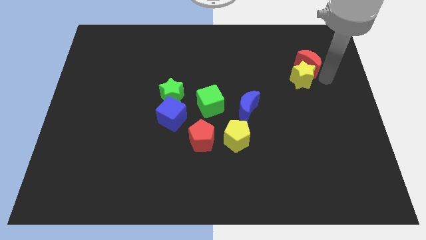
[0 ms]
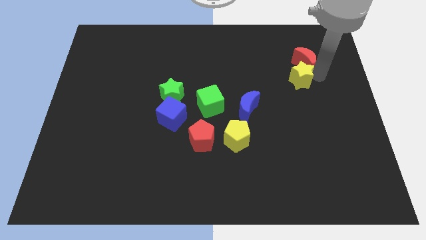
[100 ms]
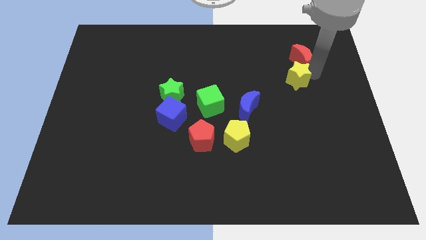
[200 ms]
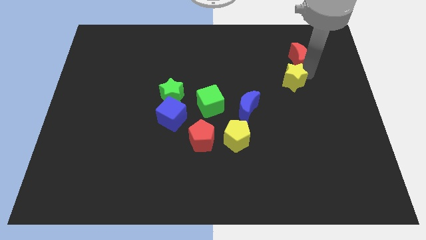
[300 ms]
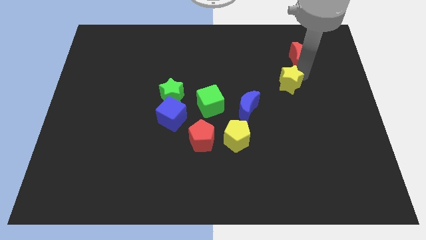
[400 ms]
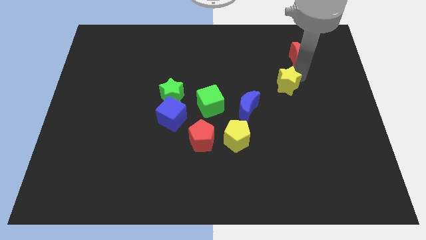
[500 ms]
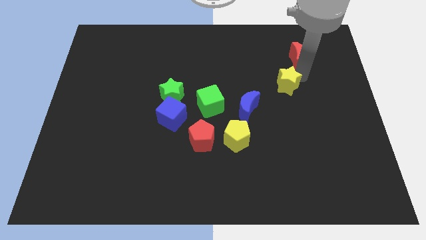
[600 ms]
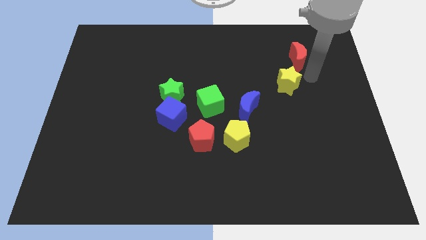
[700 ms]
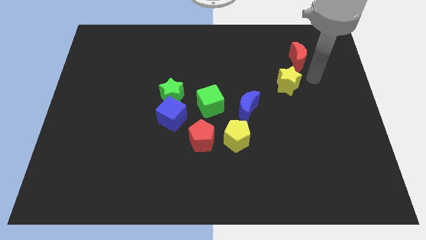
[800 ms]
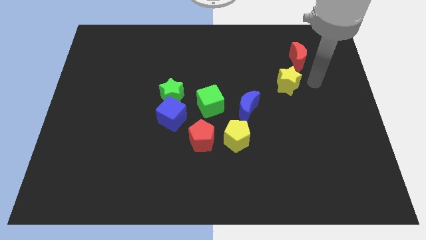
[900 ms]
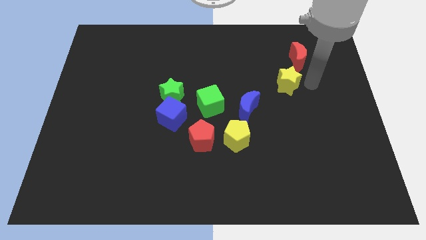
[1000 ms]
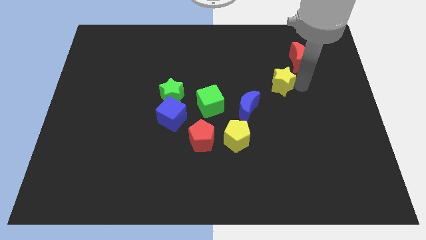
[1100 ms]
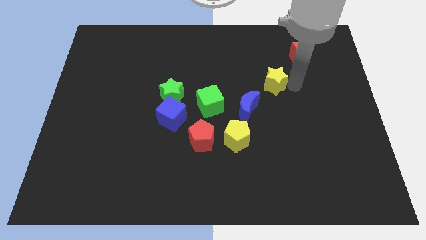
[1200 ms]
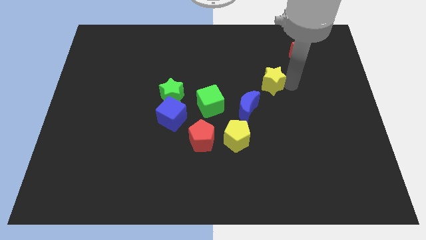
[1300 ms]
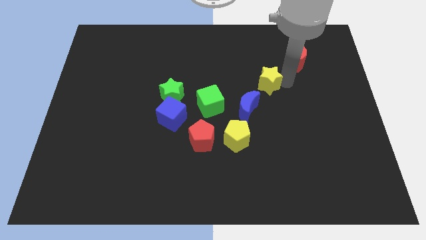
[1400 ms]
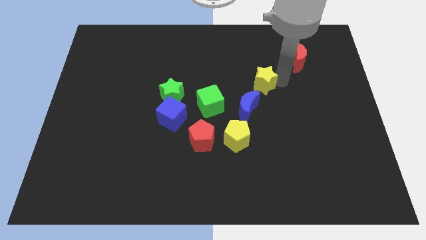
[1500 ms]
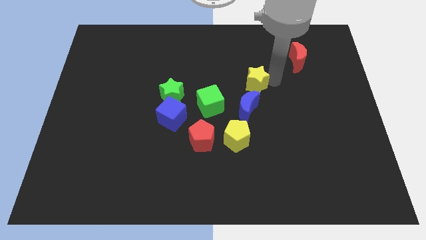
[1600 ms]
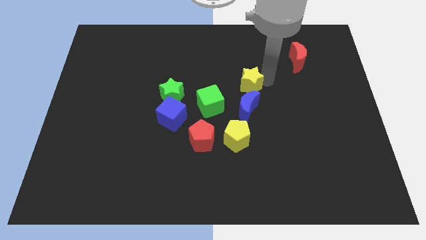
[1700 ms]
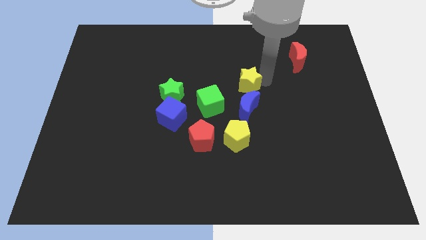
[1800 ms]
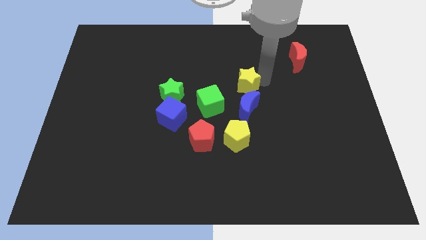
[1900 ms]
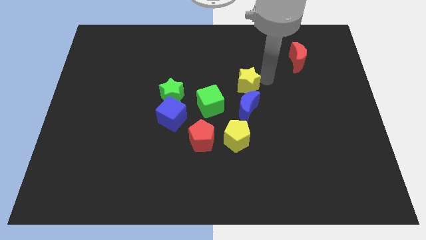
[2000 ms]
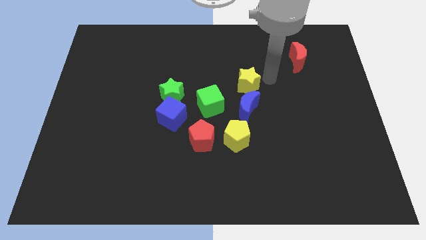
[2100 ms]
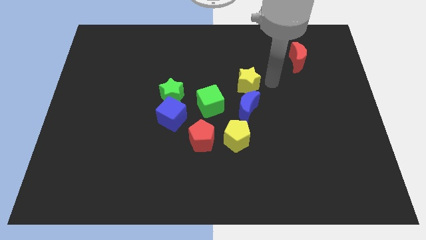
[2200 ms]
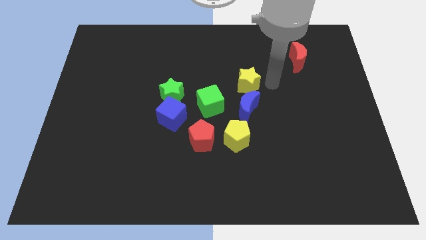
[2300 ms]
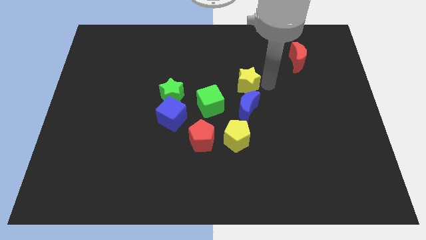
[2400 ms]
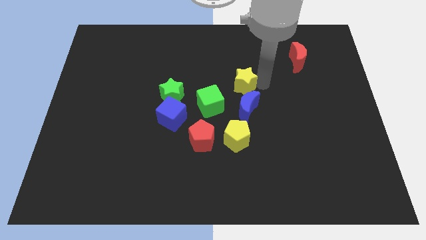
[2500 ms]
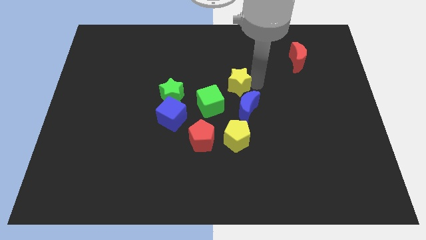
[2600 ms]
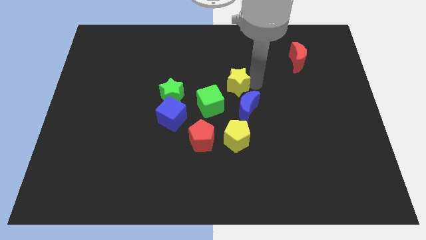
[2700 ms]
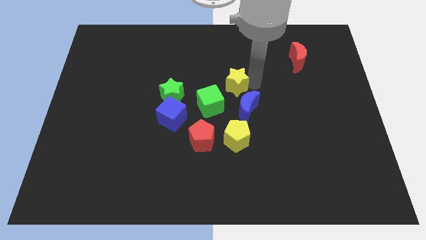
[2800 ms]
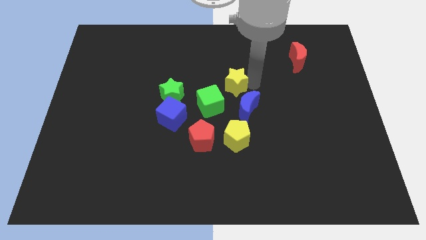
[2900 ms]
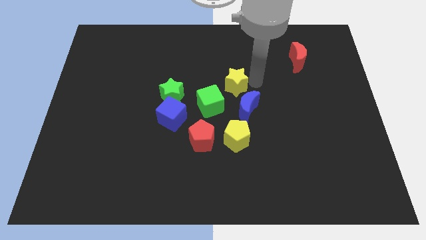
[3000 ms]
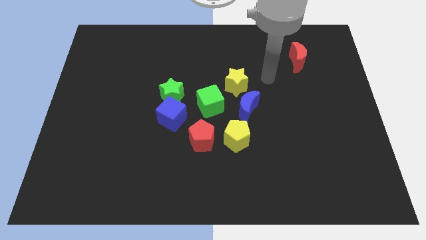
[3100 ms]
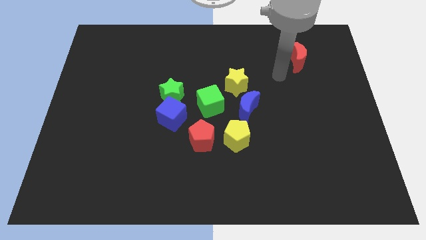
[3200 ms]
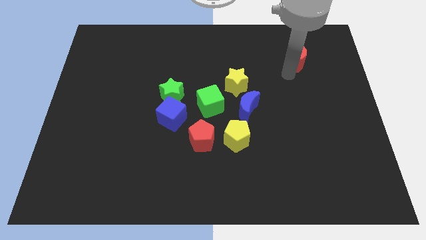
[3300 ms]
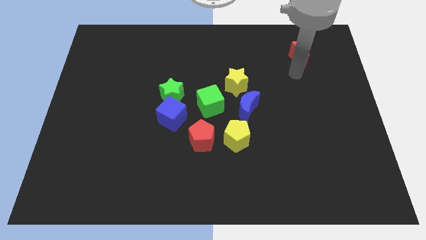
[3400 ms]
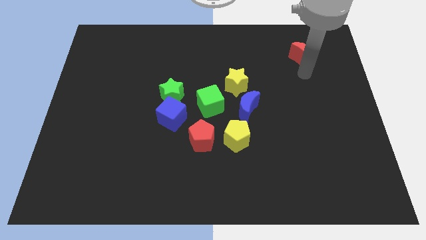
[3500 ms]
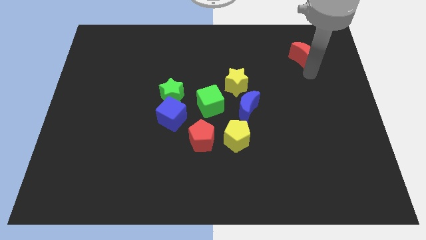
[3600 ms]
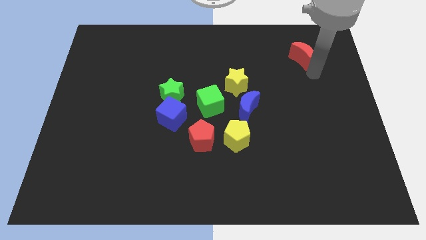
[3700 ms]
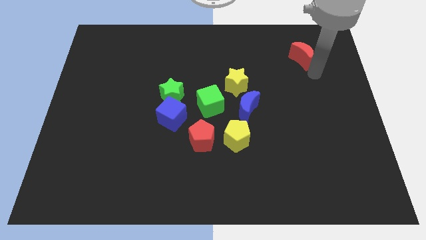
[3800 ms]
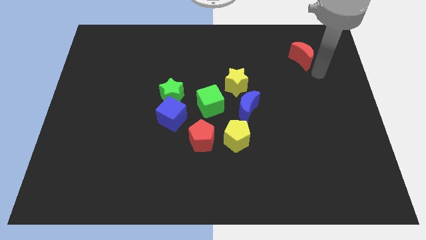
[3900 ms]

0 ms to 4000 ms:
move the yellow star to the top right of the green cube

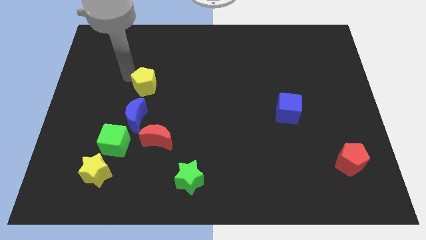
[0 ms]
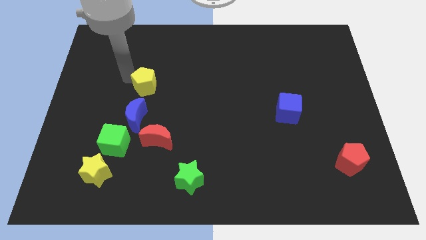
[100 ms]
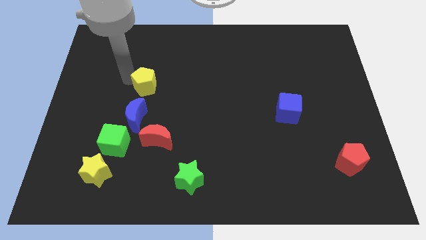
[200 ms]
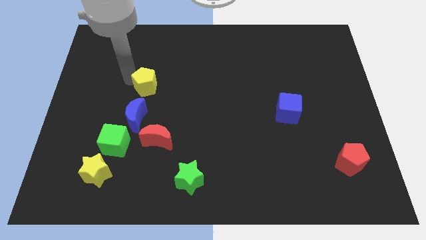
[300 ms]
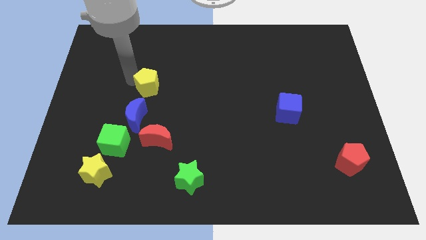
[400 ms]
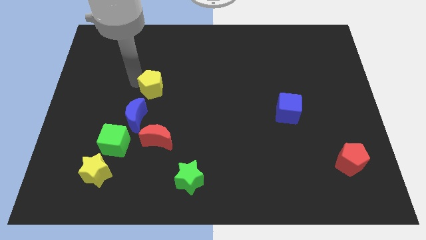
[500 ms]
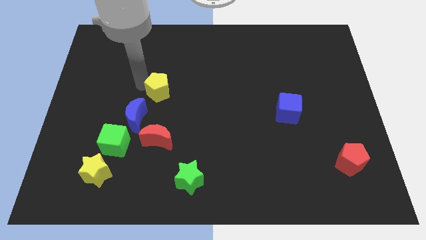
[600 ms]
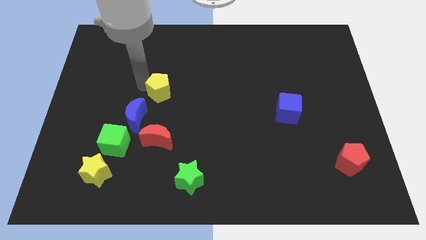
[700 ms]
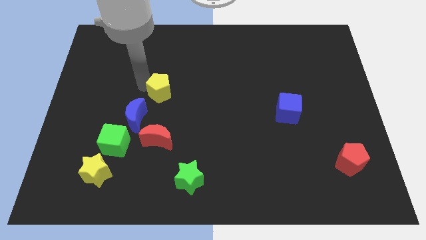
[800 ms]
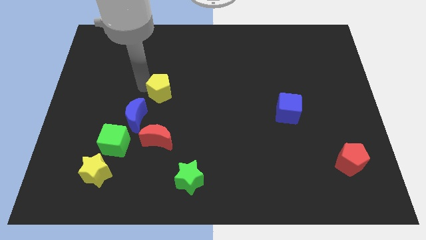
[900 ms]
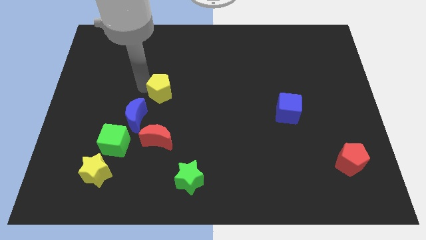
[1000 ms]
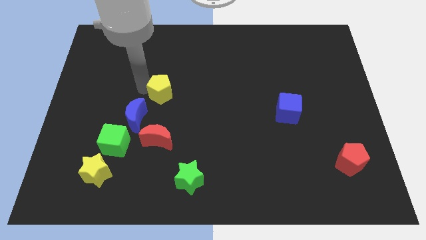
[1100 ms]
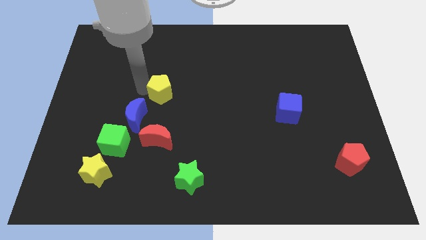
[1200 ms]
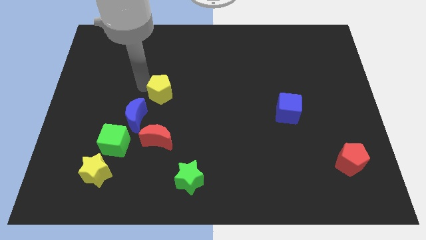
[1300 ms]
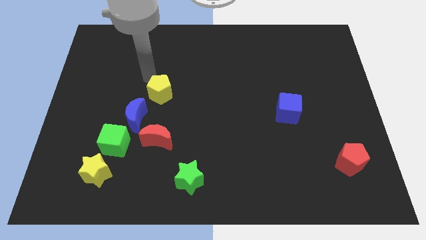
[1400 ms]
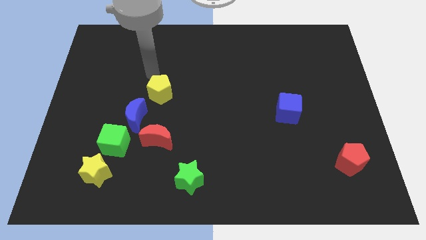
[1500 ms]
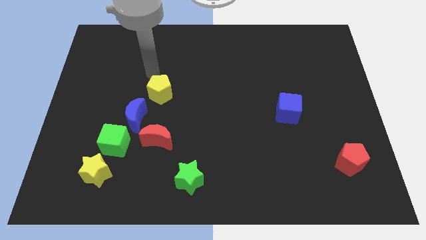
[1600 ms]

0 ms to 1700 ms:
push the yellow pentagon towards the right of the board

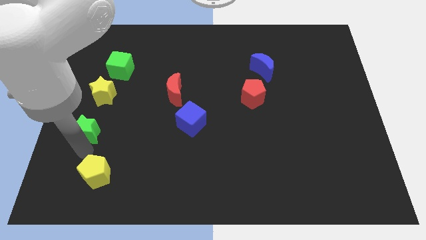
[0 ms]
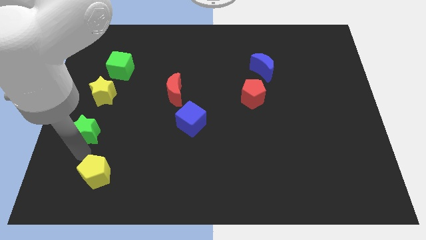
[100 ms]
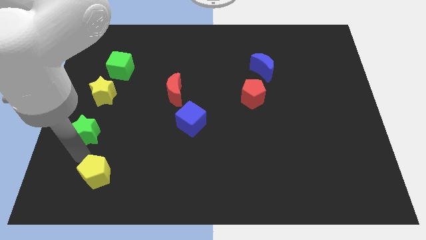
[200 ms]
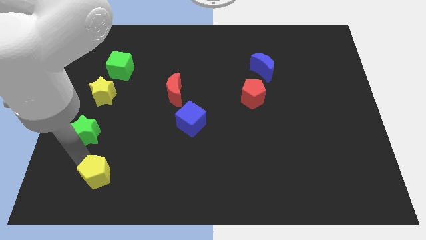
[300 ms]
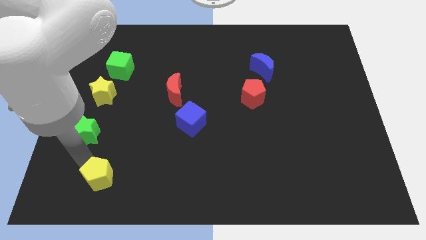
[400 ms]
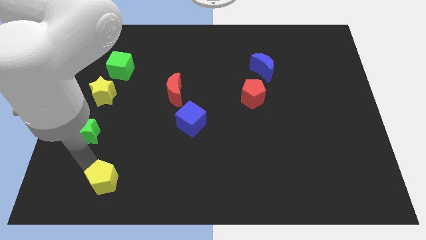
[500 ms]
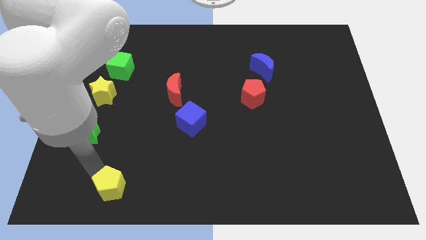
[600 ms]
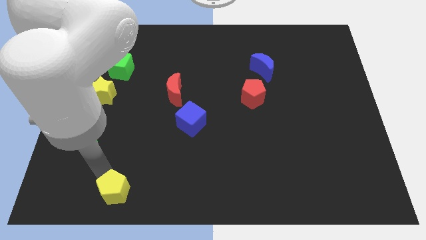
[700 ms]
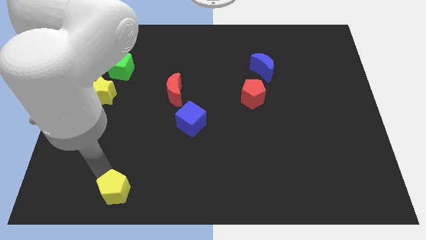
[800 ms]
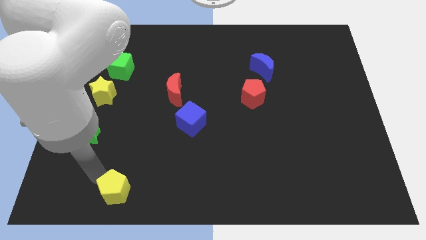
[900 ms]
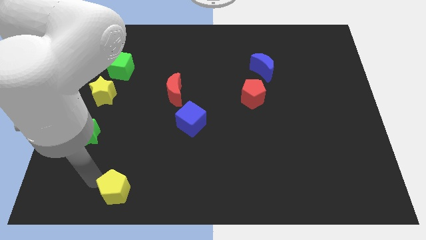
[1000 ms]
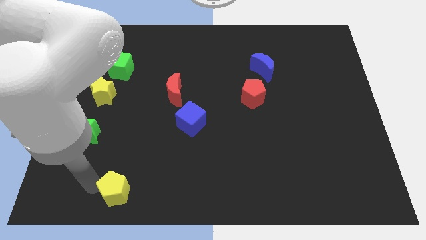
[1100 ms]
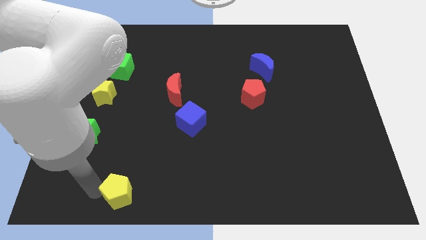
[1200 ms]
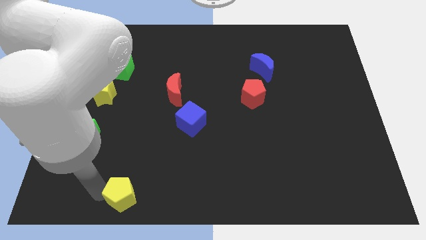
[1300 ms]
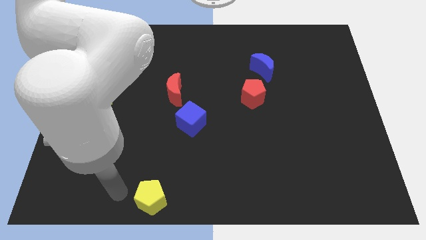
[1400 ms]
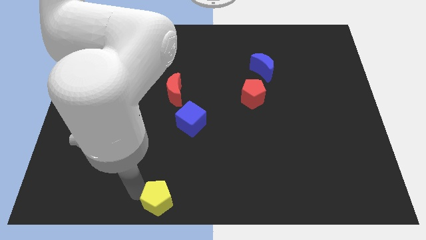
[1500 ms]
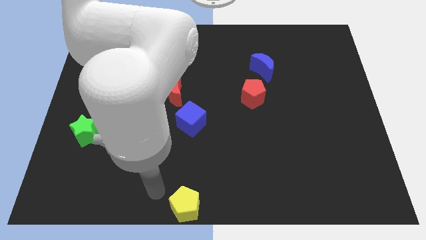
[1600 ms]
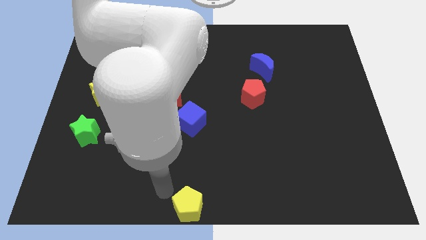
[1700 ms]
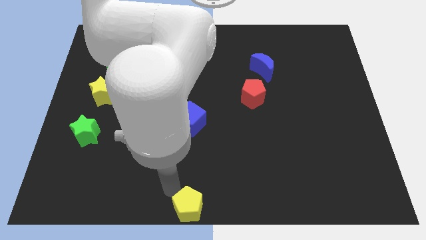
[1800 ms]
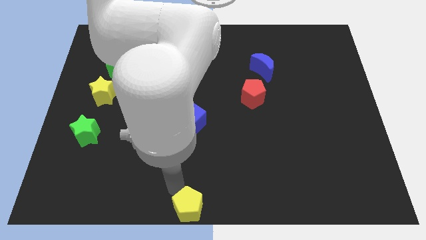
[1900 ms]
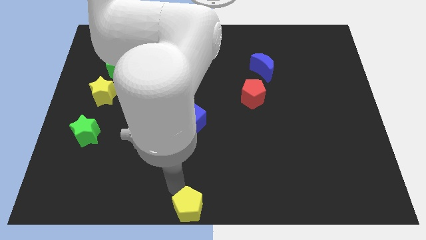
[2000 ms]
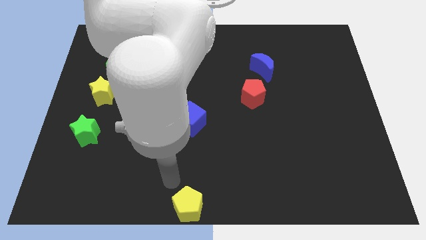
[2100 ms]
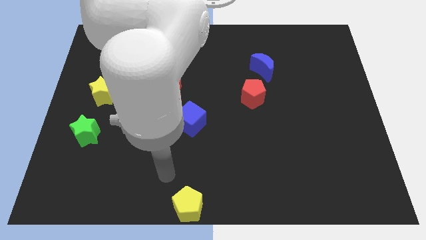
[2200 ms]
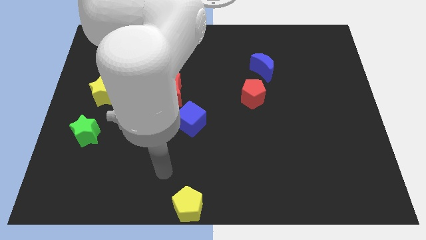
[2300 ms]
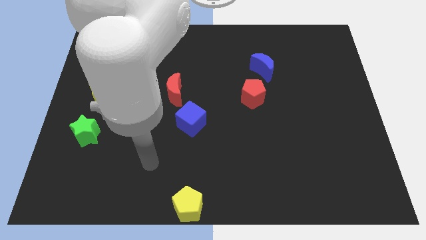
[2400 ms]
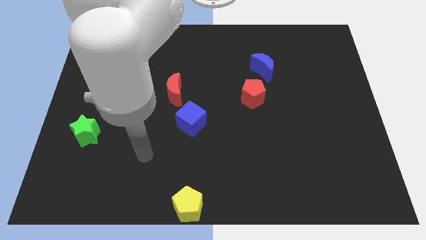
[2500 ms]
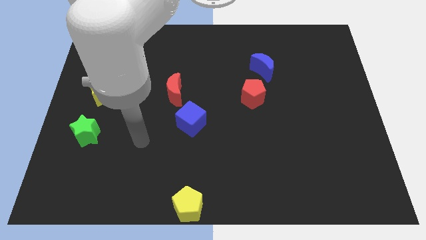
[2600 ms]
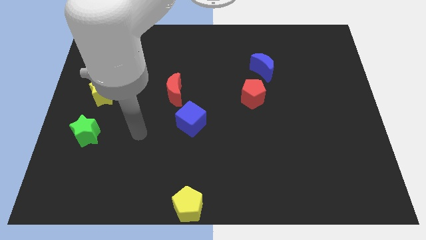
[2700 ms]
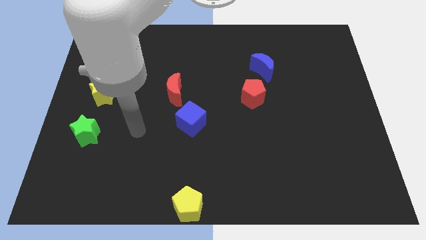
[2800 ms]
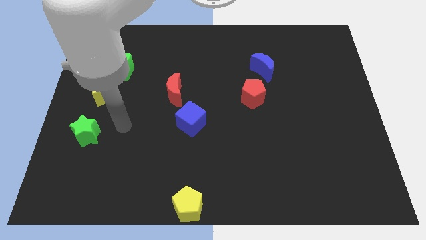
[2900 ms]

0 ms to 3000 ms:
move the yellow pentagon to the bottom center of the board

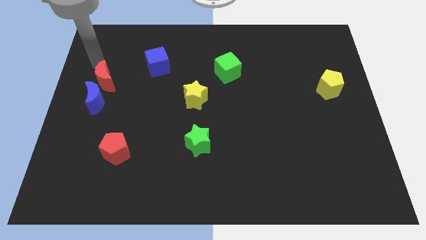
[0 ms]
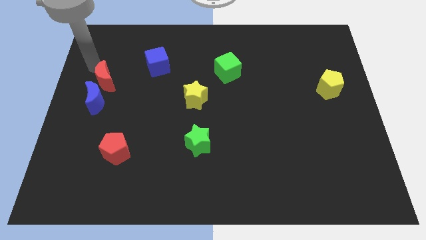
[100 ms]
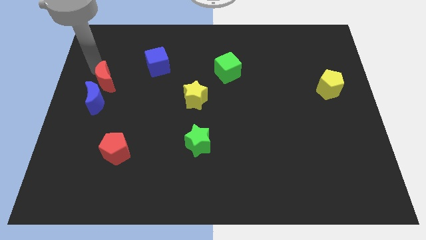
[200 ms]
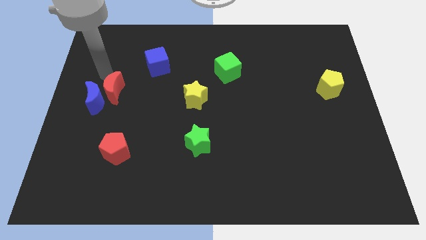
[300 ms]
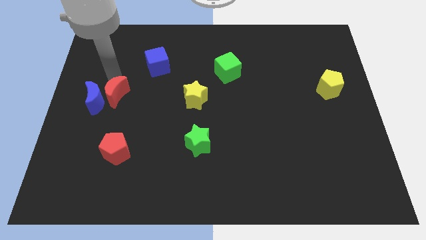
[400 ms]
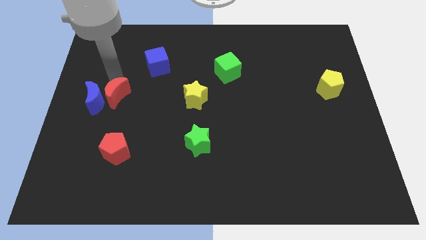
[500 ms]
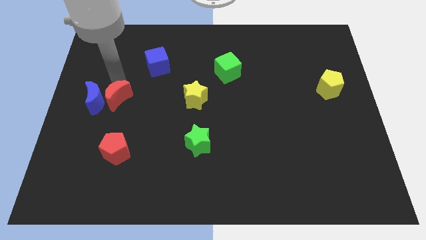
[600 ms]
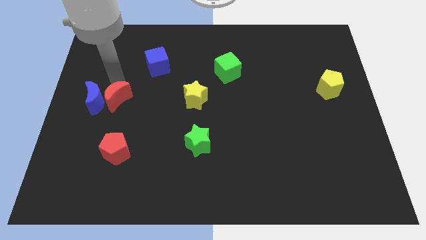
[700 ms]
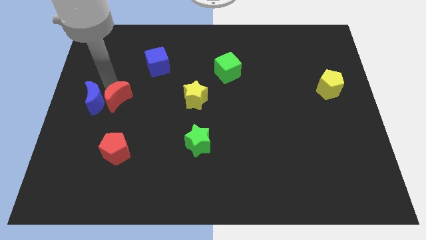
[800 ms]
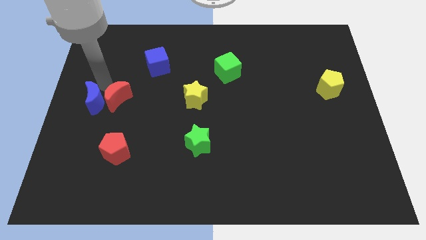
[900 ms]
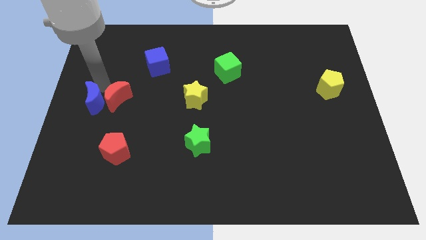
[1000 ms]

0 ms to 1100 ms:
place the red crescent right to the blue crescent
